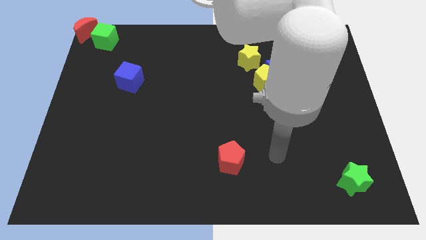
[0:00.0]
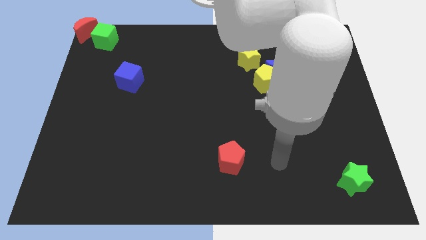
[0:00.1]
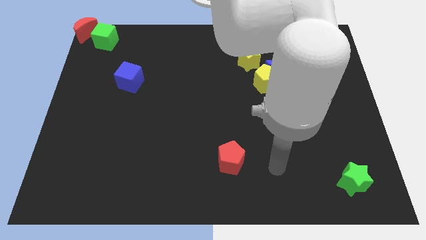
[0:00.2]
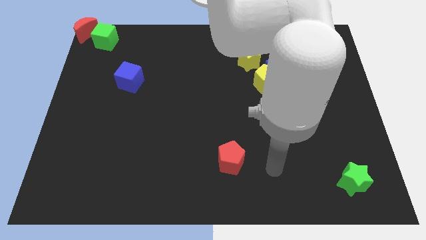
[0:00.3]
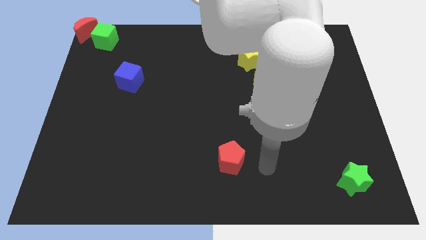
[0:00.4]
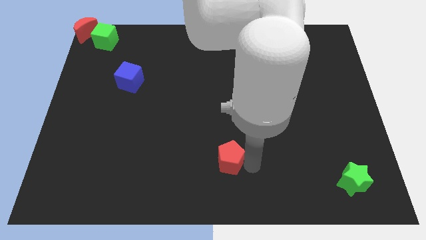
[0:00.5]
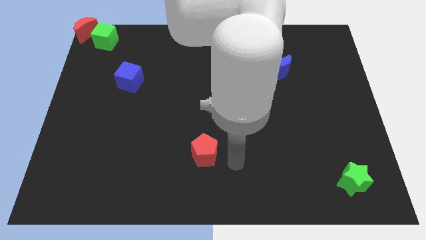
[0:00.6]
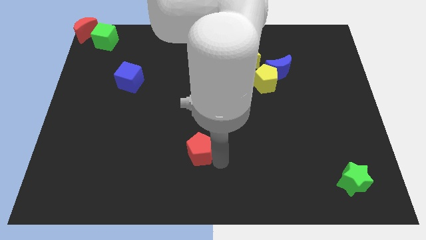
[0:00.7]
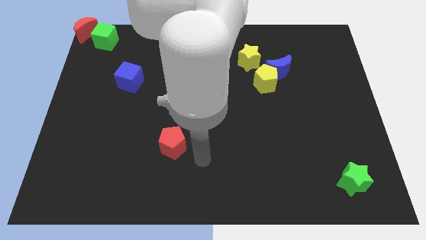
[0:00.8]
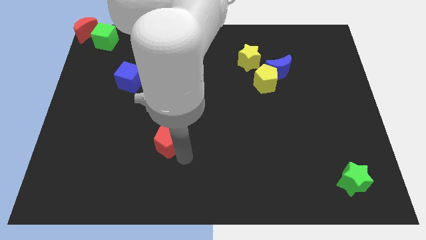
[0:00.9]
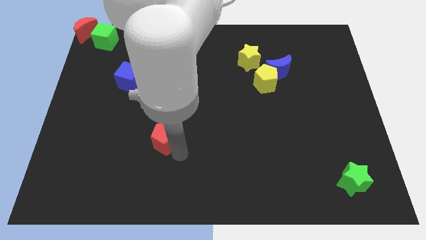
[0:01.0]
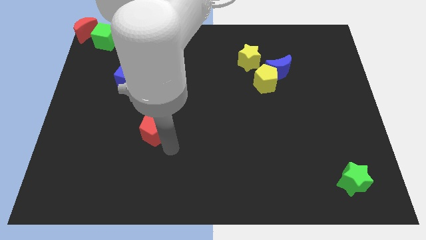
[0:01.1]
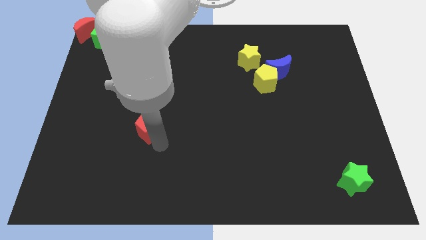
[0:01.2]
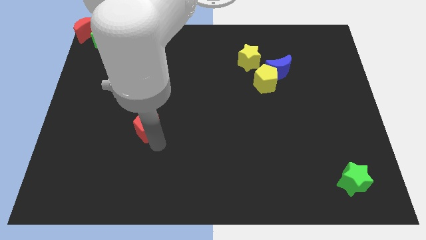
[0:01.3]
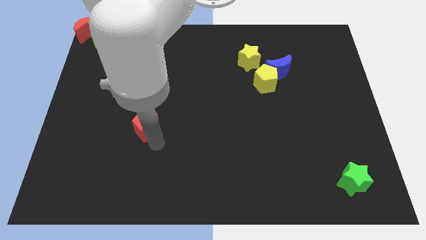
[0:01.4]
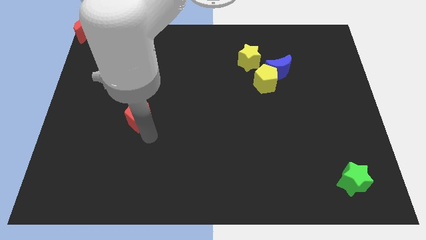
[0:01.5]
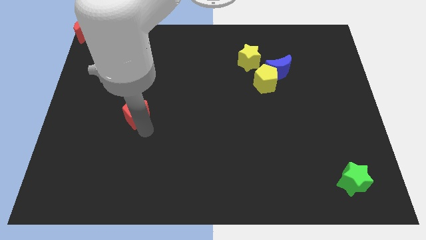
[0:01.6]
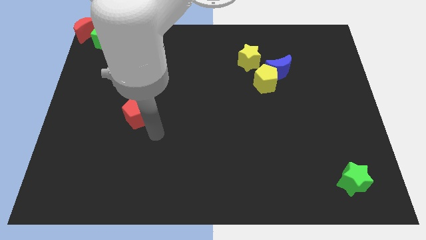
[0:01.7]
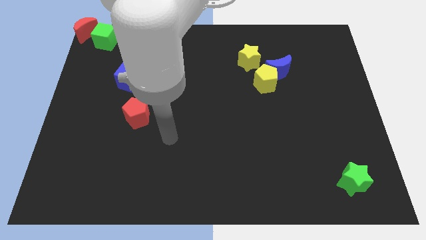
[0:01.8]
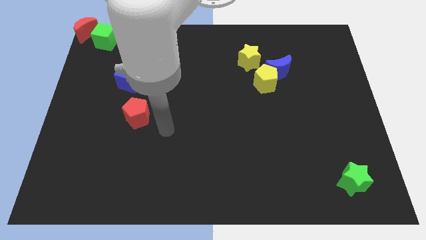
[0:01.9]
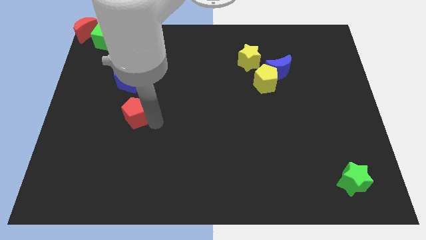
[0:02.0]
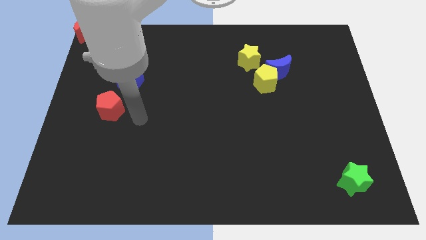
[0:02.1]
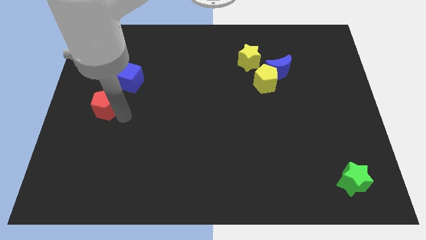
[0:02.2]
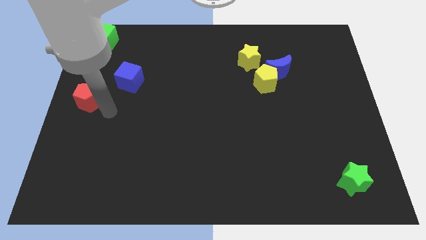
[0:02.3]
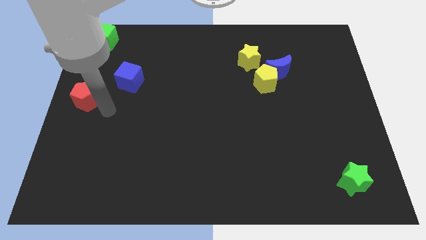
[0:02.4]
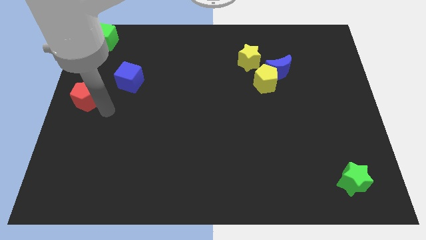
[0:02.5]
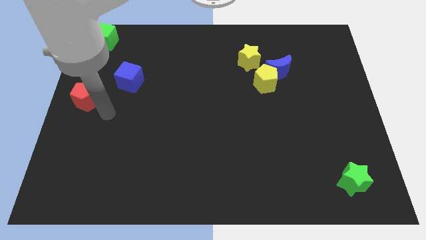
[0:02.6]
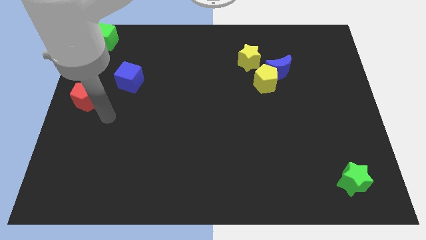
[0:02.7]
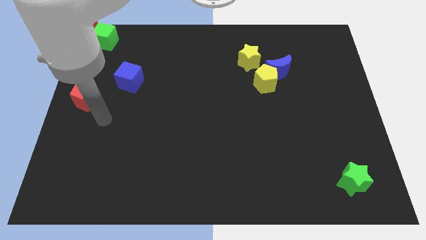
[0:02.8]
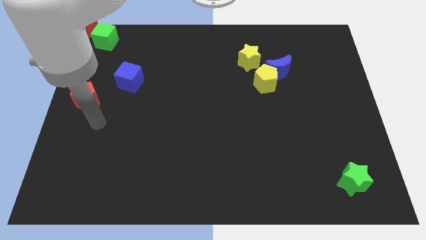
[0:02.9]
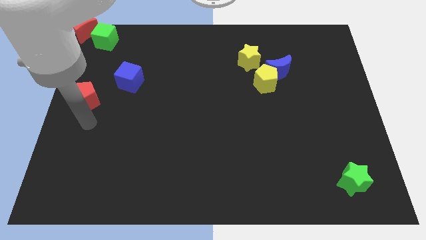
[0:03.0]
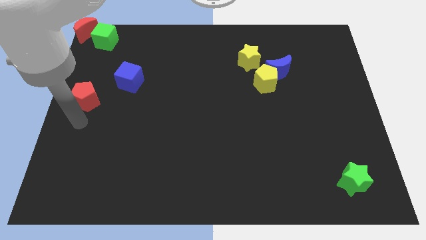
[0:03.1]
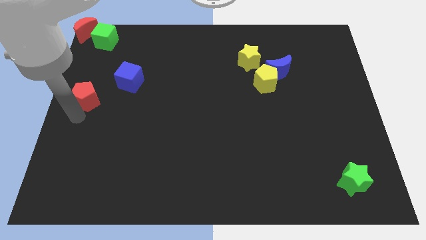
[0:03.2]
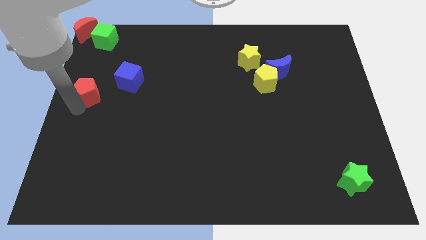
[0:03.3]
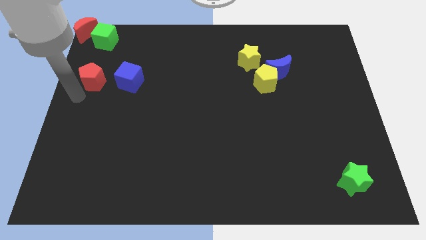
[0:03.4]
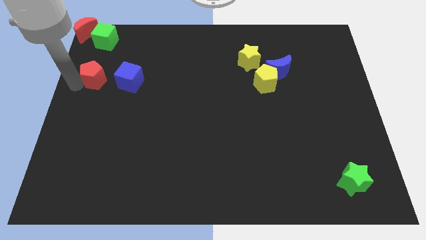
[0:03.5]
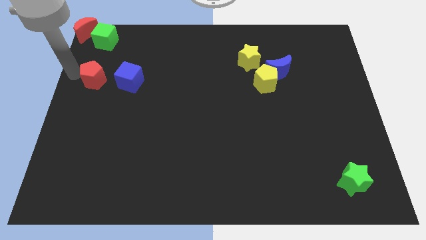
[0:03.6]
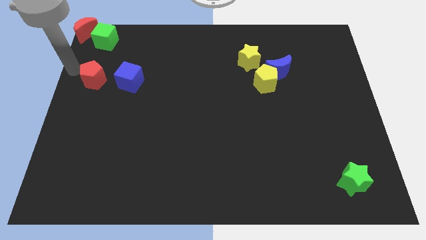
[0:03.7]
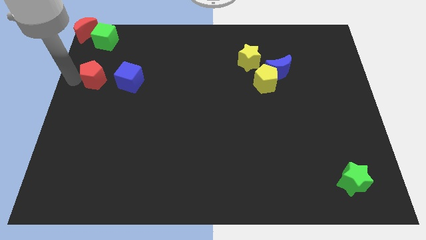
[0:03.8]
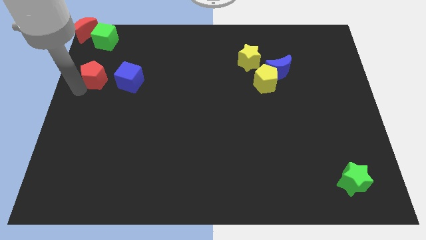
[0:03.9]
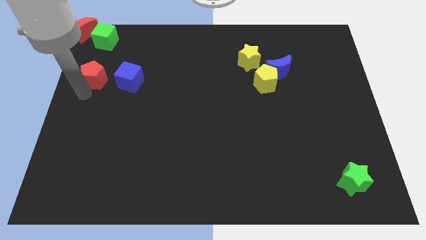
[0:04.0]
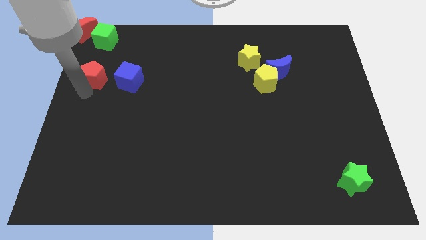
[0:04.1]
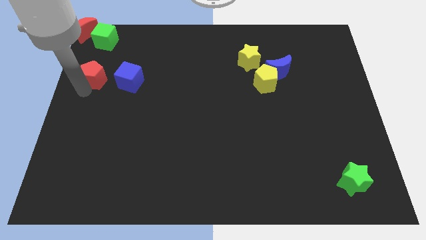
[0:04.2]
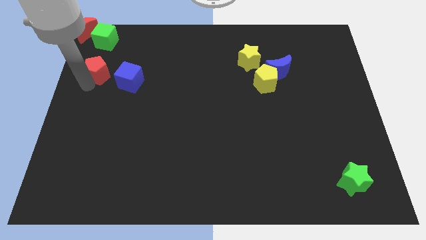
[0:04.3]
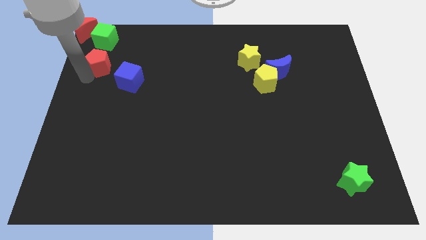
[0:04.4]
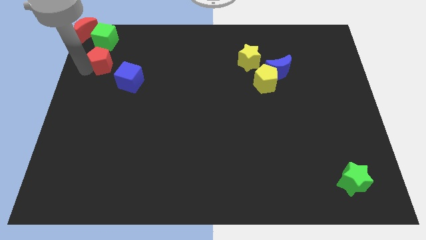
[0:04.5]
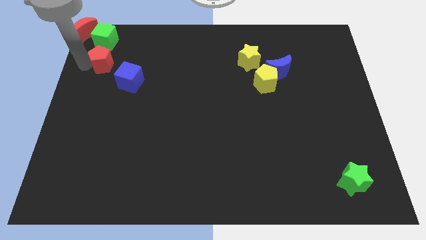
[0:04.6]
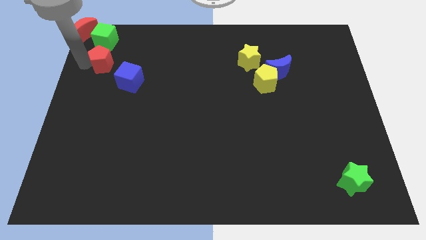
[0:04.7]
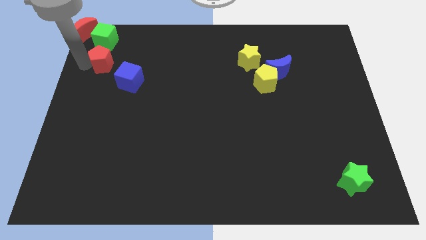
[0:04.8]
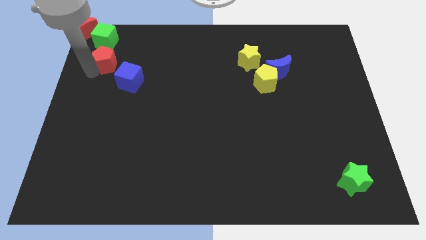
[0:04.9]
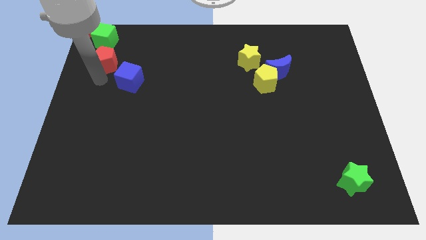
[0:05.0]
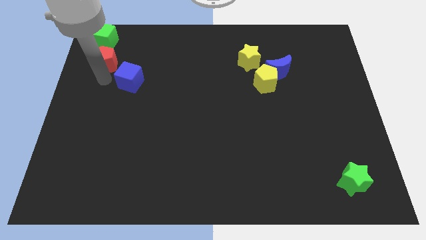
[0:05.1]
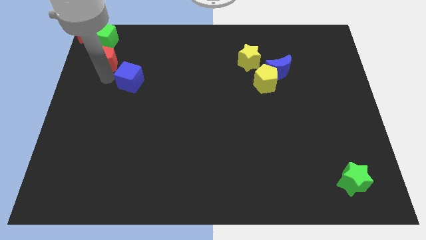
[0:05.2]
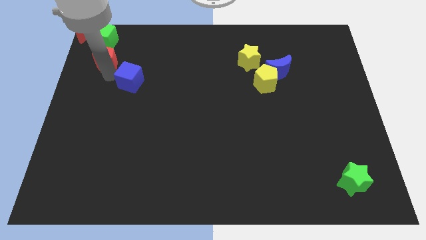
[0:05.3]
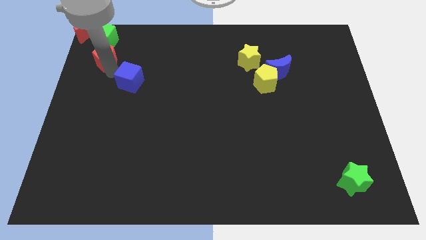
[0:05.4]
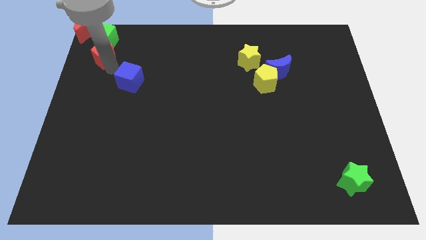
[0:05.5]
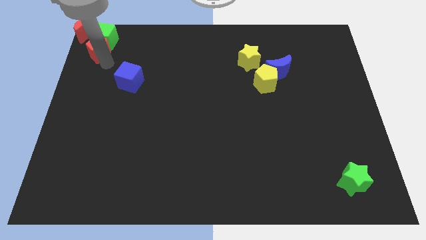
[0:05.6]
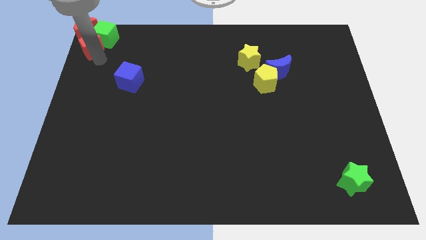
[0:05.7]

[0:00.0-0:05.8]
push the red pentagon into the green cube

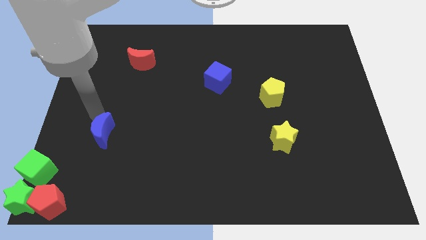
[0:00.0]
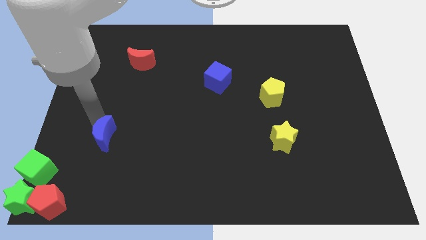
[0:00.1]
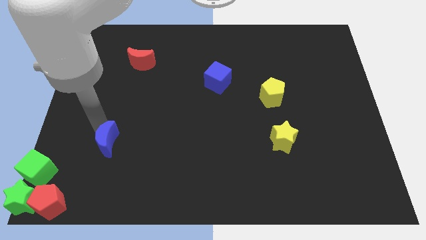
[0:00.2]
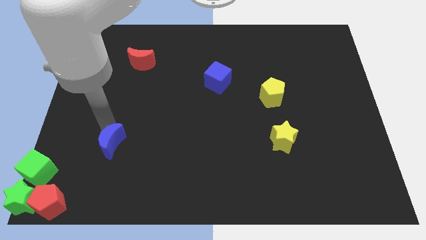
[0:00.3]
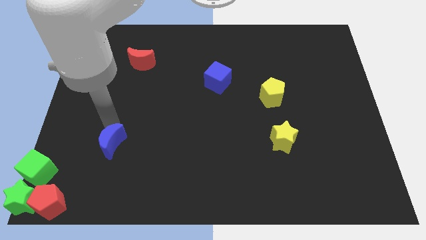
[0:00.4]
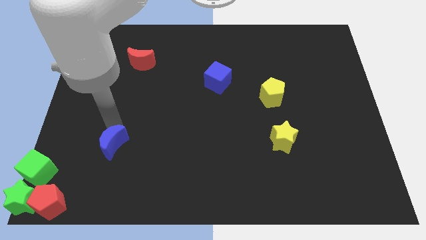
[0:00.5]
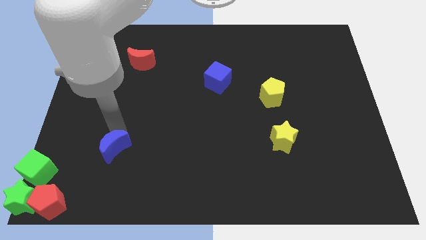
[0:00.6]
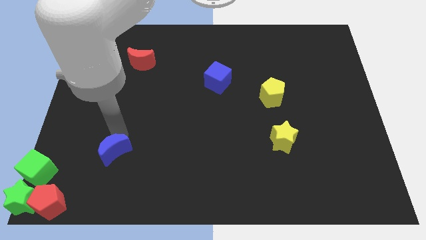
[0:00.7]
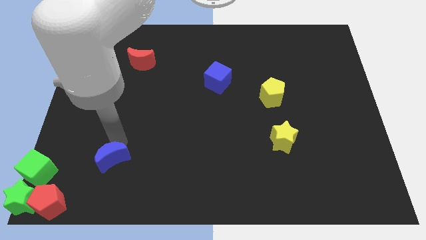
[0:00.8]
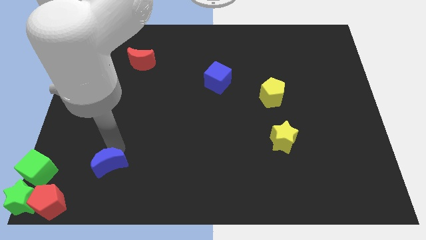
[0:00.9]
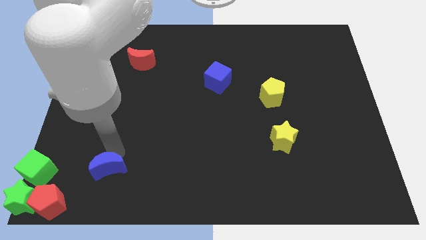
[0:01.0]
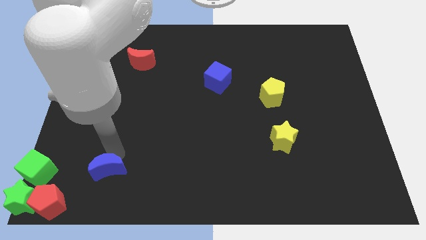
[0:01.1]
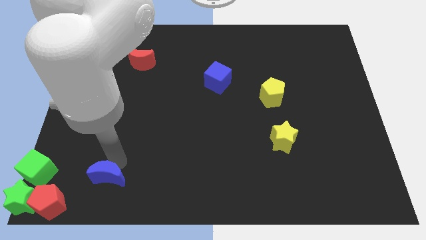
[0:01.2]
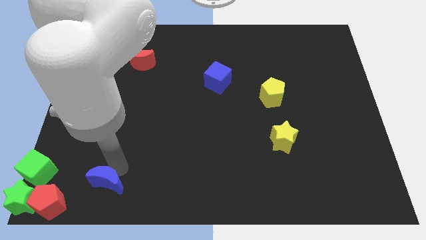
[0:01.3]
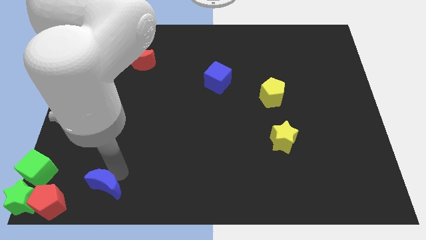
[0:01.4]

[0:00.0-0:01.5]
push the blue crescent downwards of the board

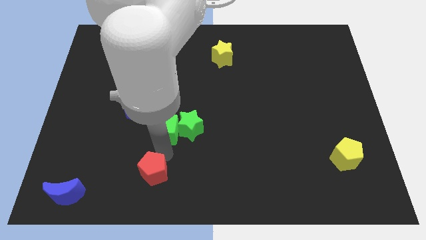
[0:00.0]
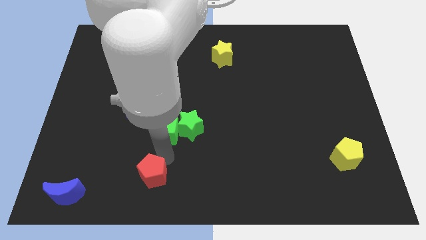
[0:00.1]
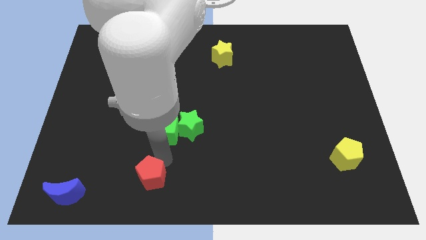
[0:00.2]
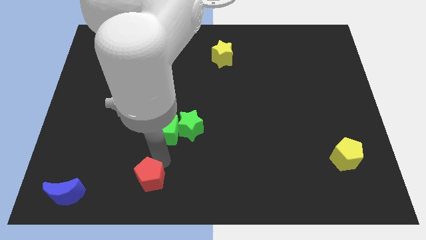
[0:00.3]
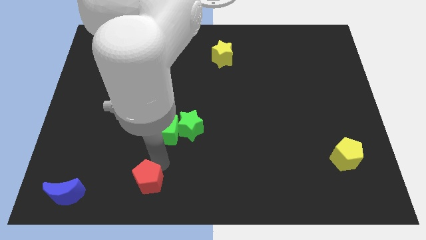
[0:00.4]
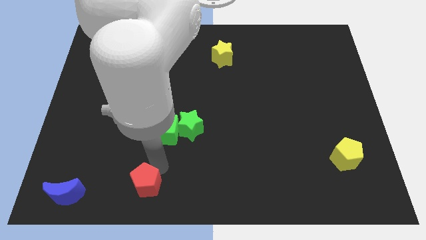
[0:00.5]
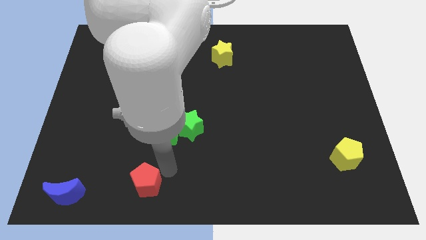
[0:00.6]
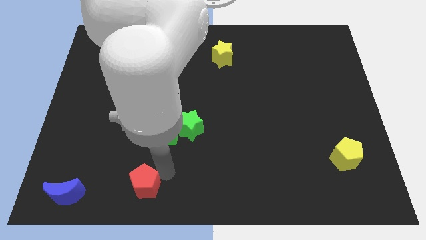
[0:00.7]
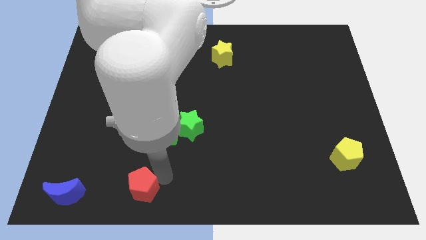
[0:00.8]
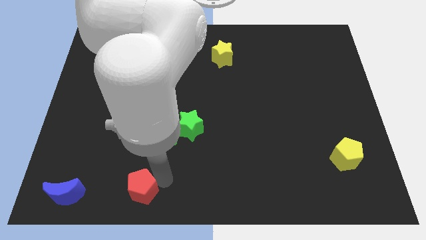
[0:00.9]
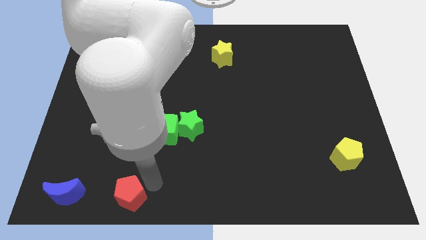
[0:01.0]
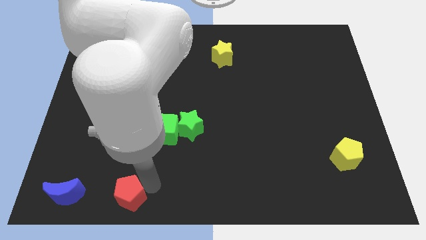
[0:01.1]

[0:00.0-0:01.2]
move the red pentagon horizontal to the blue crescent

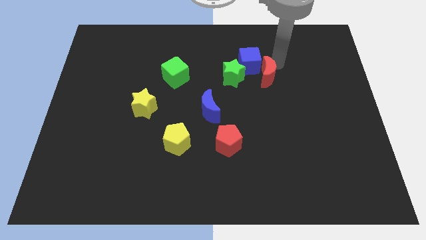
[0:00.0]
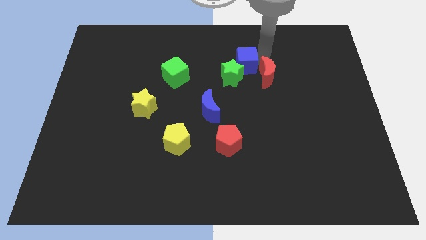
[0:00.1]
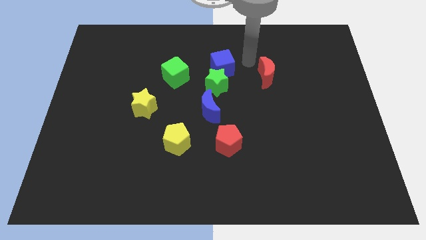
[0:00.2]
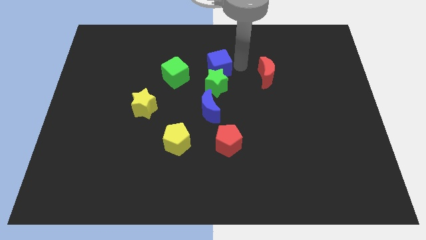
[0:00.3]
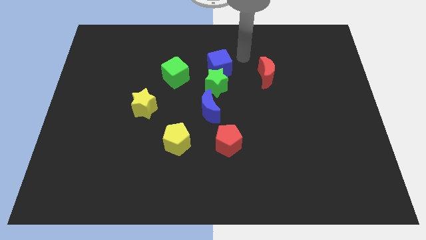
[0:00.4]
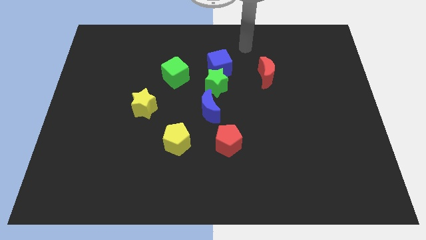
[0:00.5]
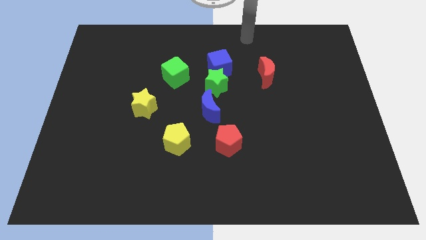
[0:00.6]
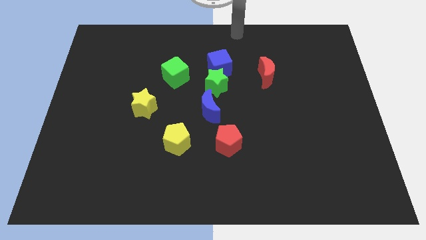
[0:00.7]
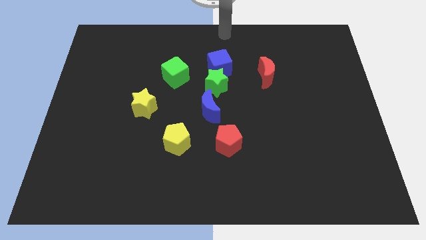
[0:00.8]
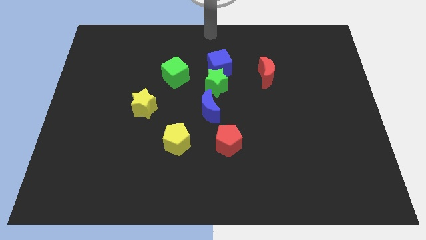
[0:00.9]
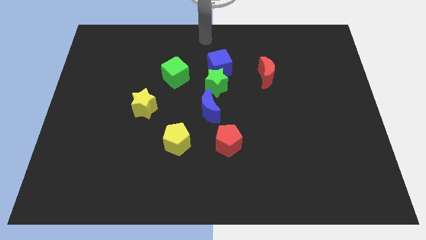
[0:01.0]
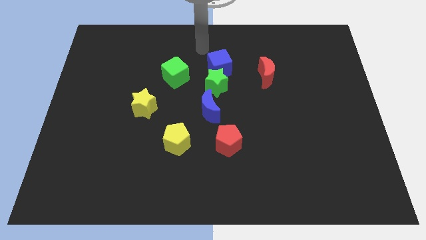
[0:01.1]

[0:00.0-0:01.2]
place blue cube above green star
